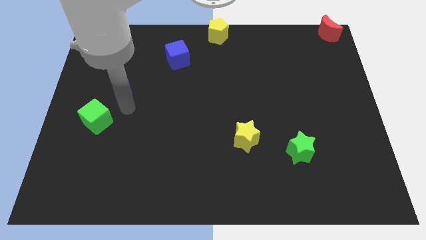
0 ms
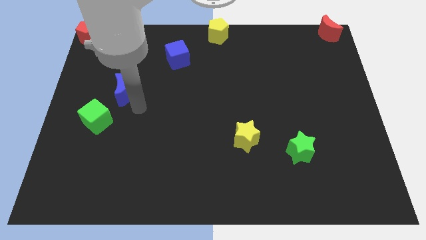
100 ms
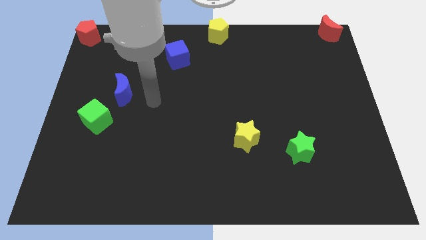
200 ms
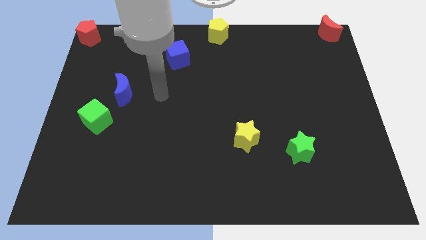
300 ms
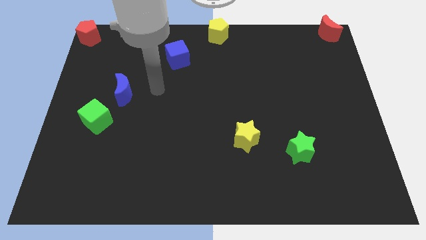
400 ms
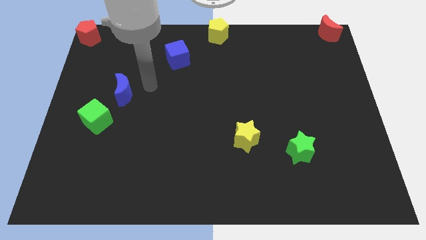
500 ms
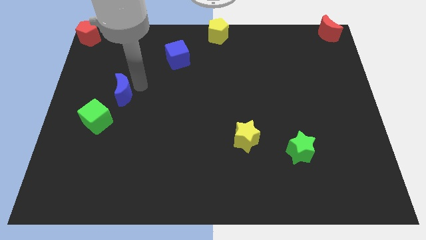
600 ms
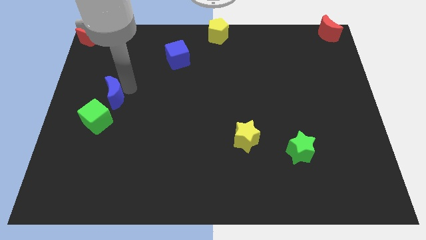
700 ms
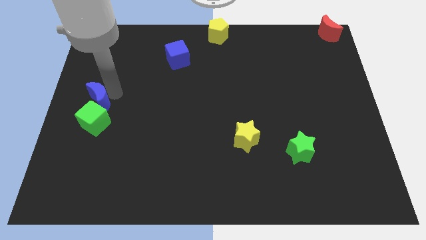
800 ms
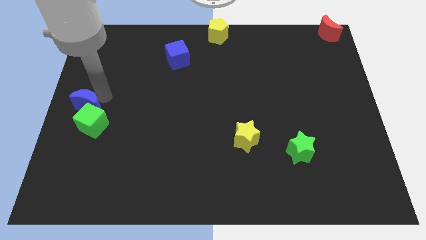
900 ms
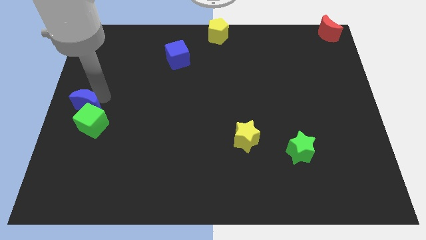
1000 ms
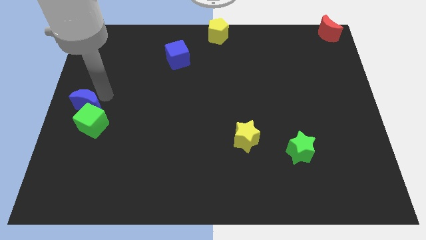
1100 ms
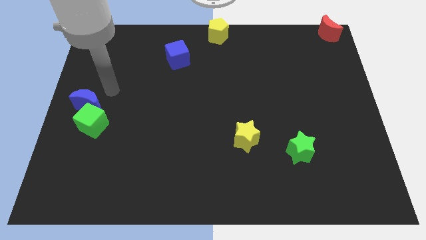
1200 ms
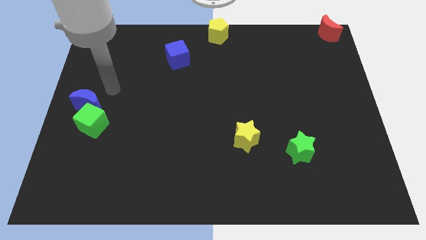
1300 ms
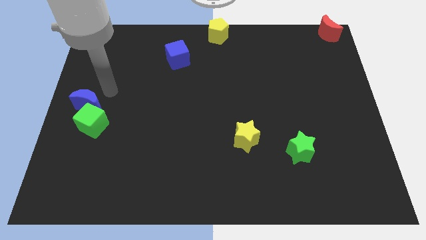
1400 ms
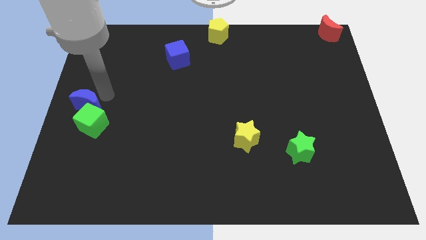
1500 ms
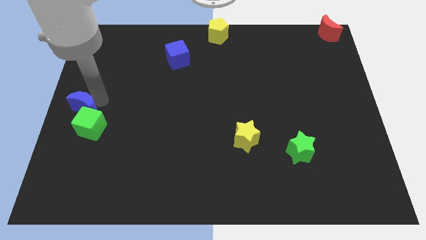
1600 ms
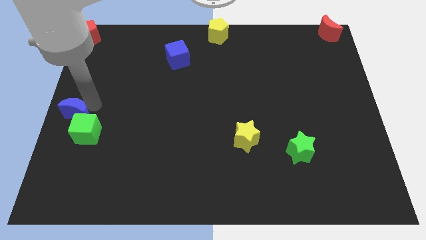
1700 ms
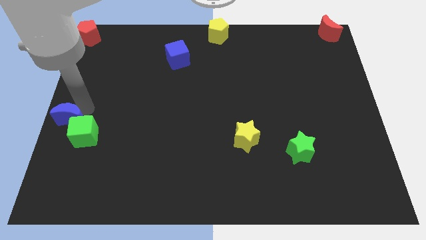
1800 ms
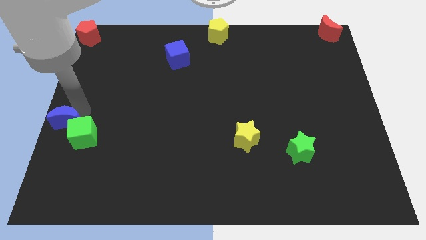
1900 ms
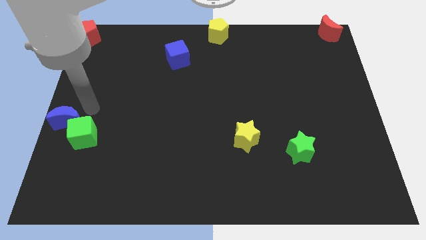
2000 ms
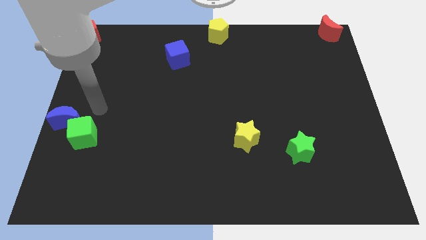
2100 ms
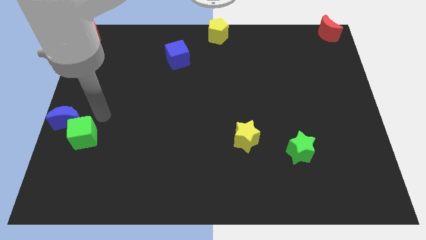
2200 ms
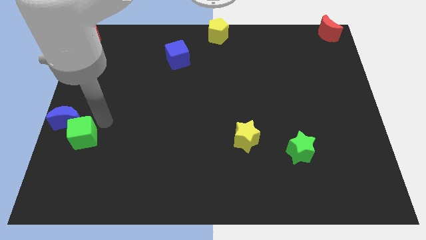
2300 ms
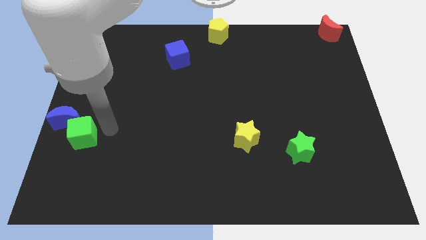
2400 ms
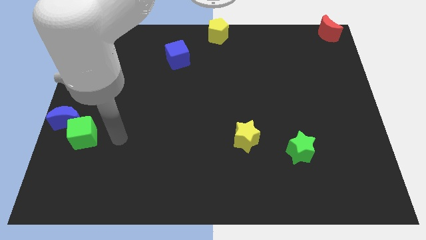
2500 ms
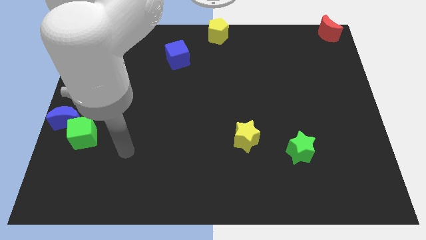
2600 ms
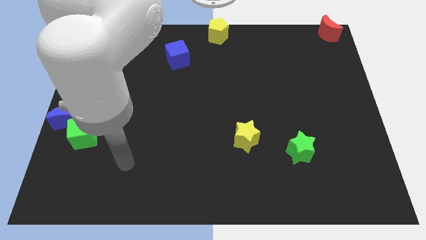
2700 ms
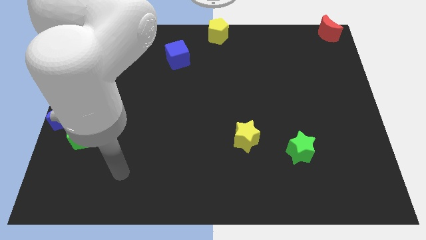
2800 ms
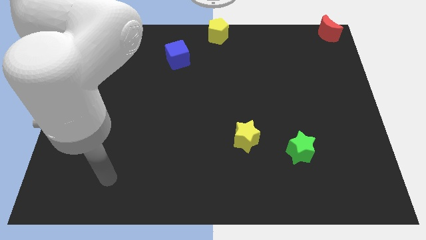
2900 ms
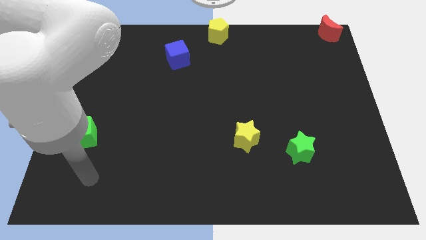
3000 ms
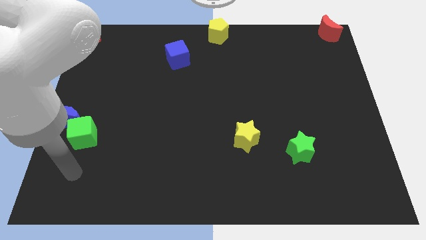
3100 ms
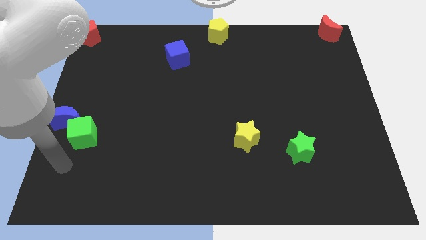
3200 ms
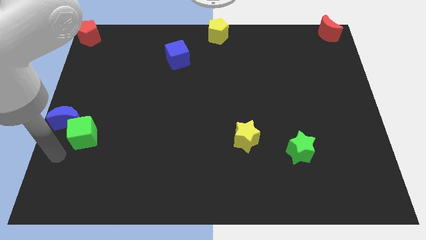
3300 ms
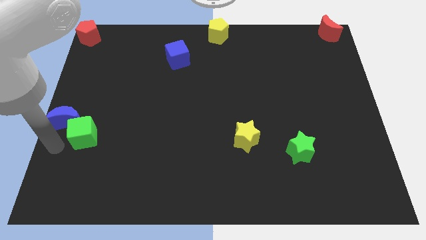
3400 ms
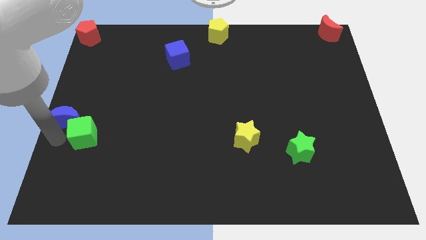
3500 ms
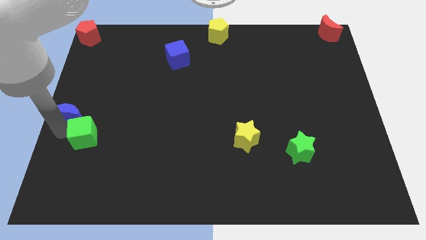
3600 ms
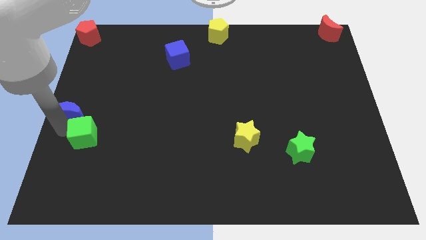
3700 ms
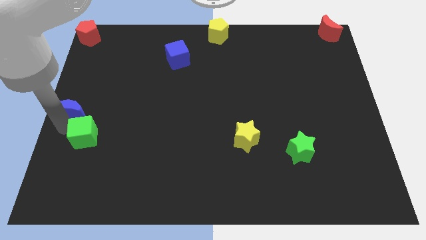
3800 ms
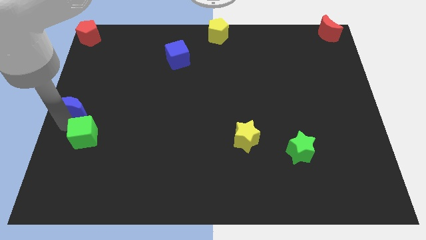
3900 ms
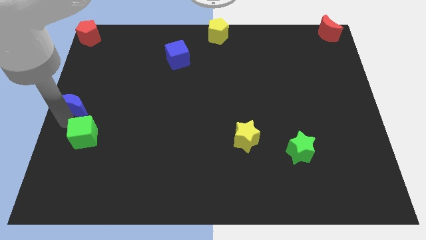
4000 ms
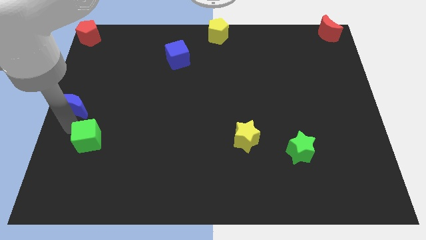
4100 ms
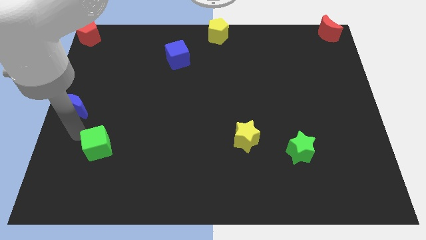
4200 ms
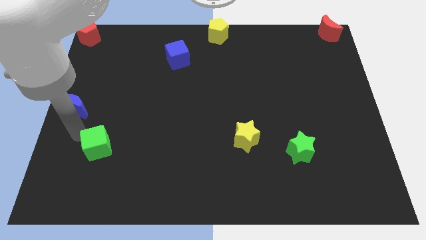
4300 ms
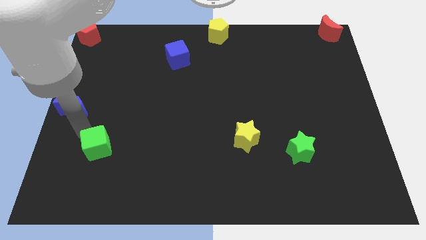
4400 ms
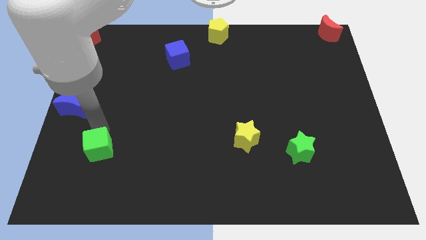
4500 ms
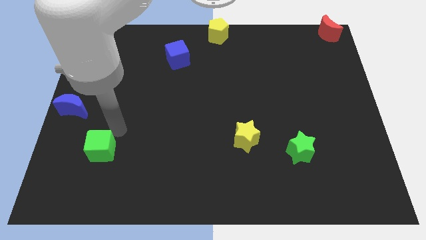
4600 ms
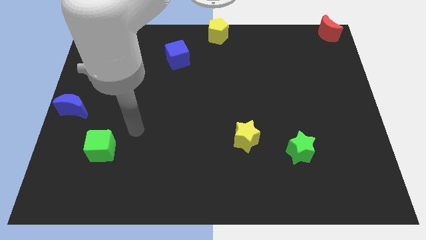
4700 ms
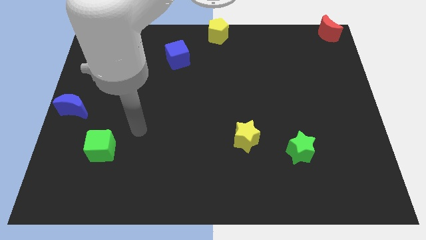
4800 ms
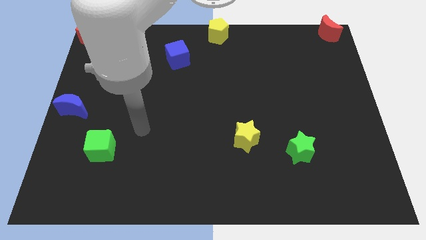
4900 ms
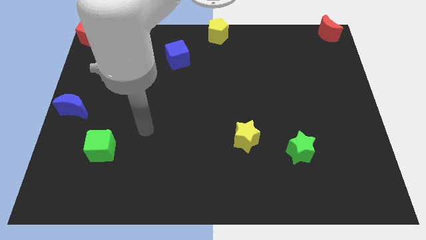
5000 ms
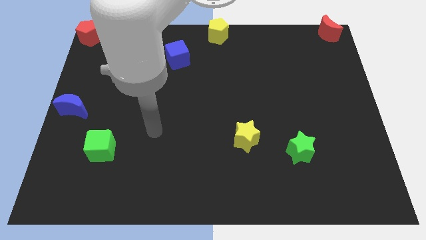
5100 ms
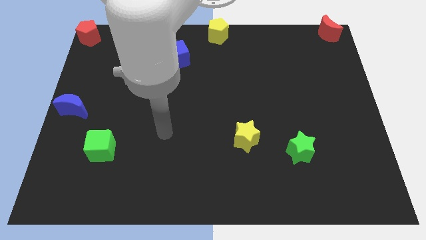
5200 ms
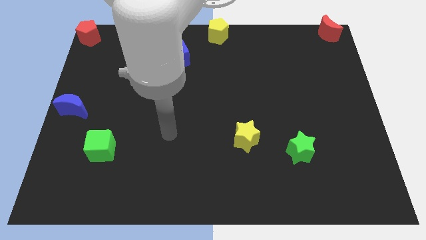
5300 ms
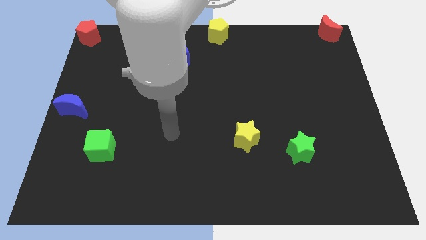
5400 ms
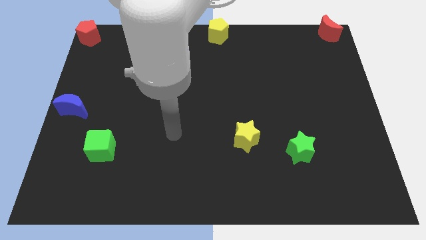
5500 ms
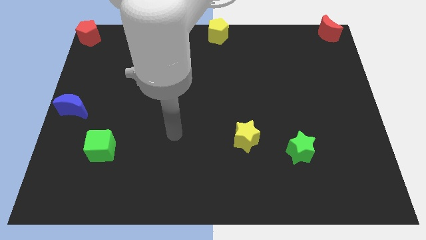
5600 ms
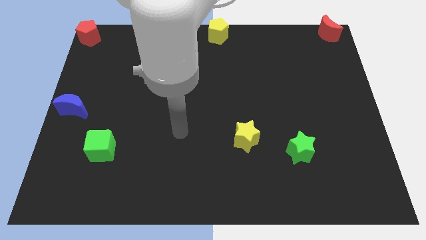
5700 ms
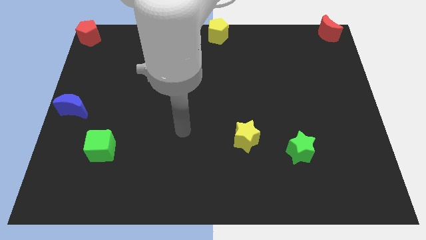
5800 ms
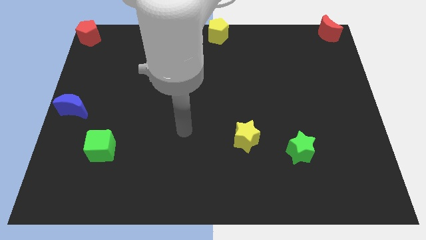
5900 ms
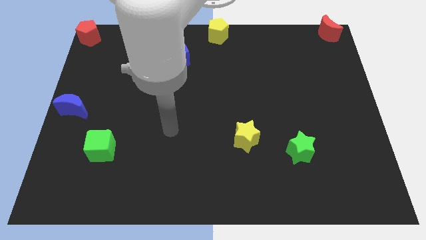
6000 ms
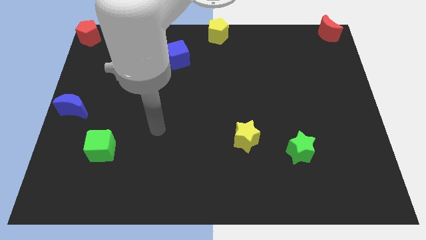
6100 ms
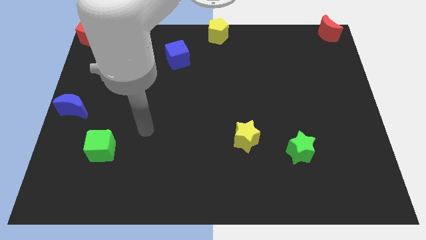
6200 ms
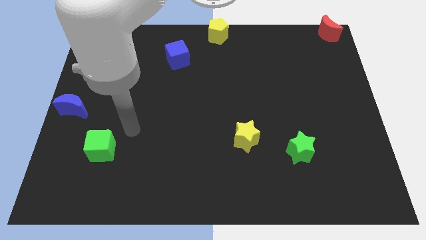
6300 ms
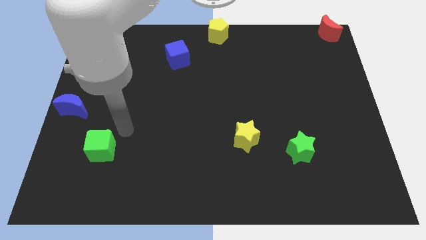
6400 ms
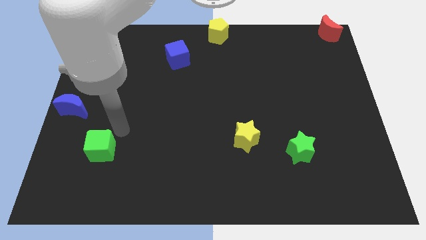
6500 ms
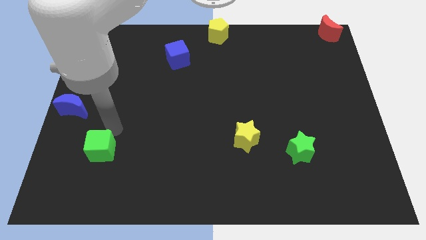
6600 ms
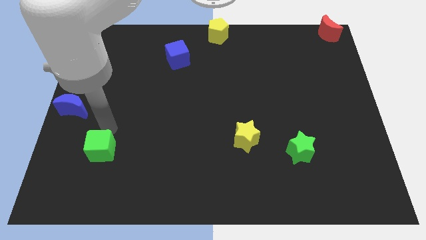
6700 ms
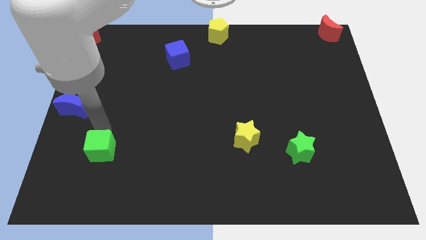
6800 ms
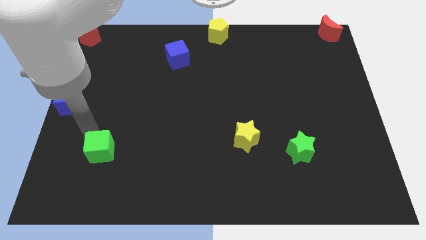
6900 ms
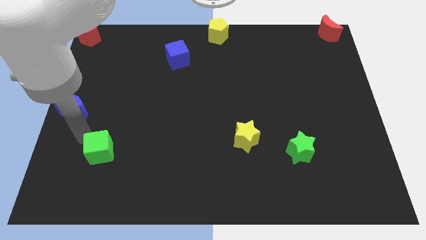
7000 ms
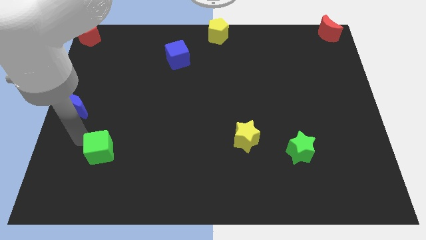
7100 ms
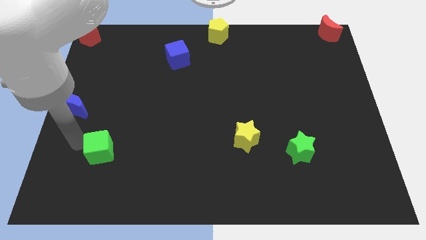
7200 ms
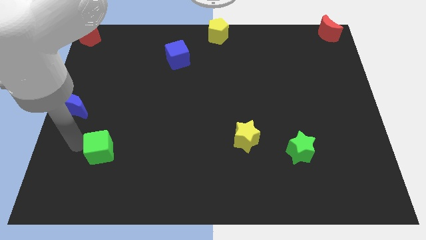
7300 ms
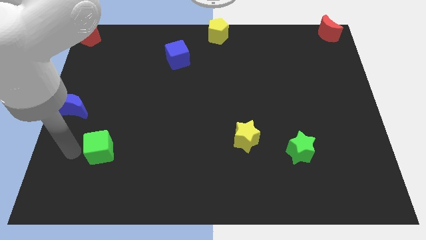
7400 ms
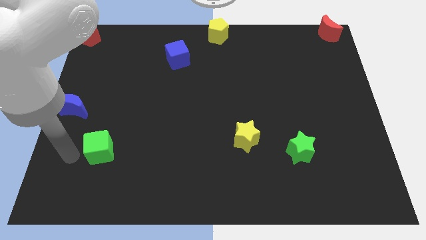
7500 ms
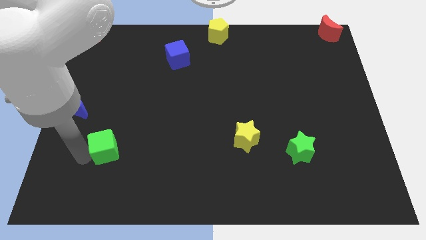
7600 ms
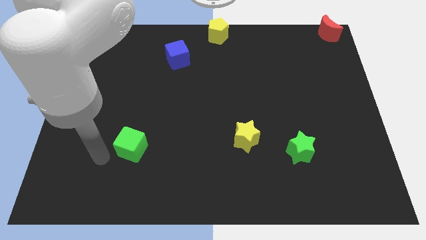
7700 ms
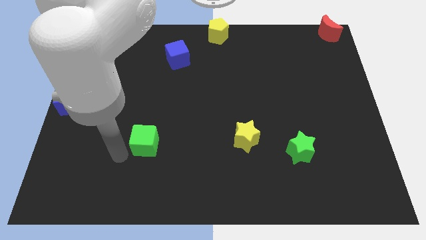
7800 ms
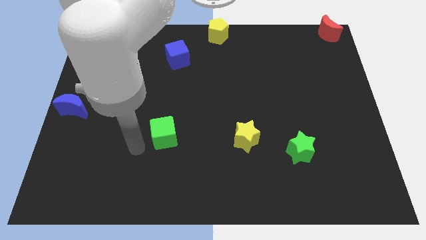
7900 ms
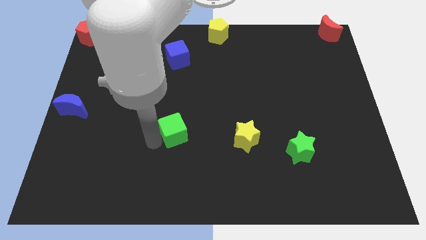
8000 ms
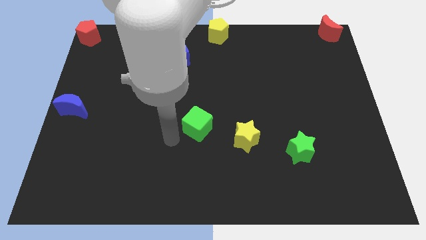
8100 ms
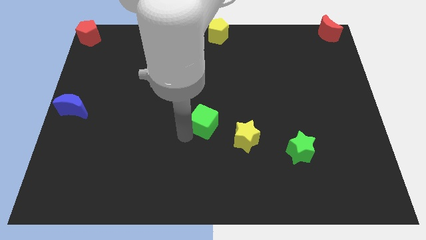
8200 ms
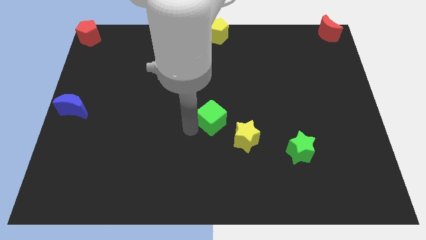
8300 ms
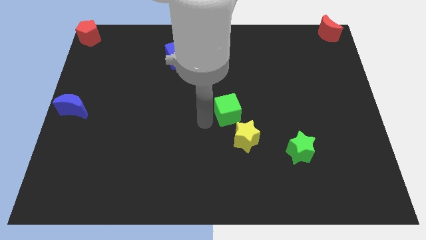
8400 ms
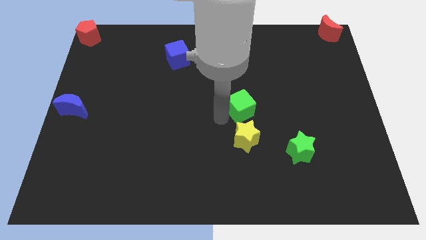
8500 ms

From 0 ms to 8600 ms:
move the green cube above the yellow star

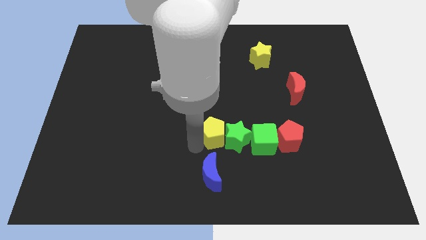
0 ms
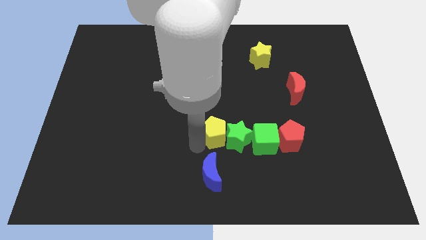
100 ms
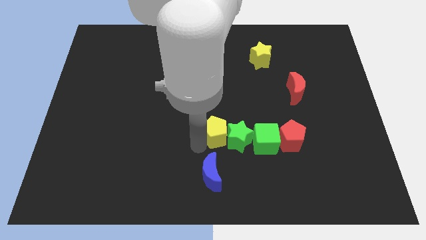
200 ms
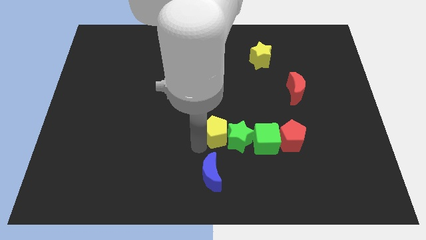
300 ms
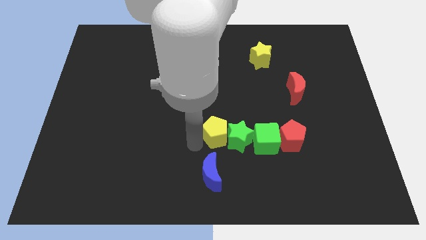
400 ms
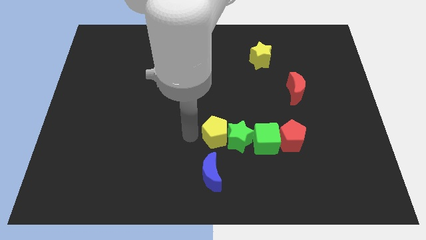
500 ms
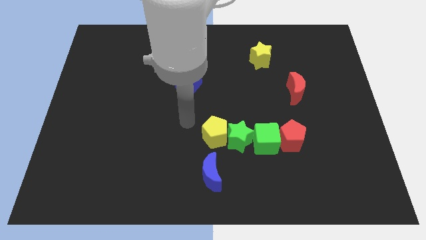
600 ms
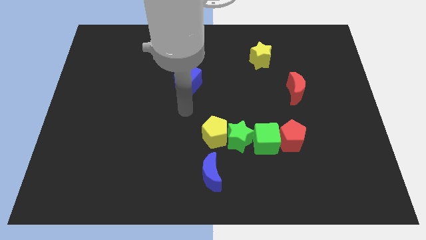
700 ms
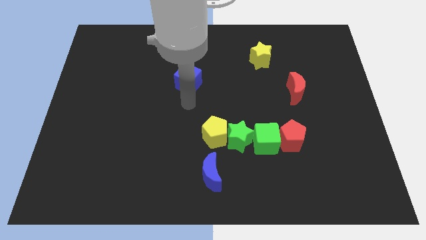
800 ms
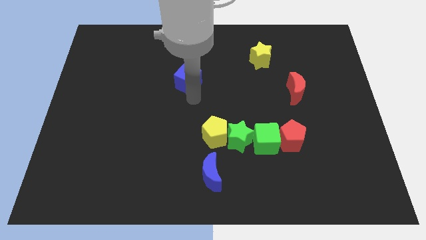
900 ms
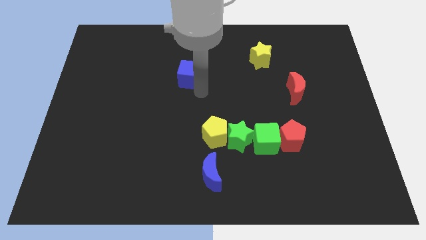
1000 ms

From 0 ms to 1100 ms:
move the arm towards the blue cube
